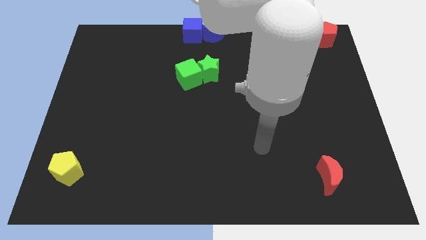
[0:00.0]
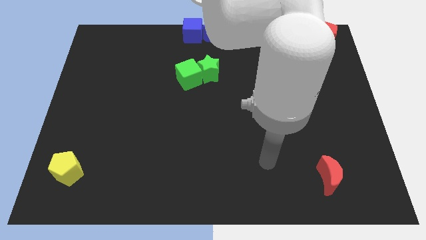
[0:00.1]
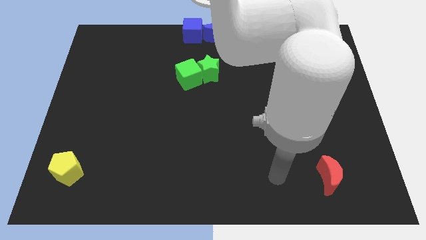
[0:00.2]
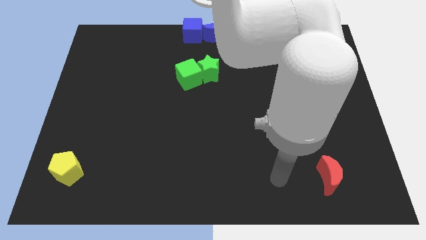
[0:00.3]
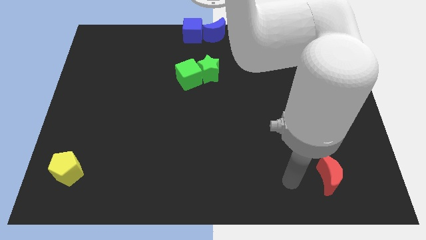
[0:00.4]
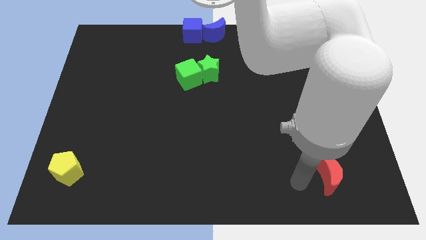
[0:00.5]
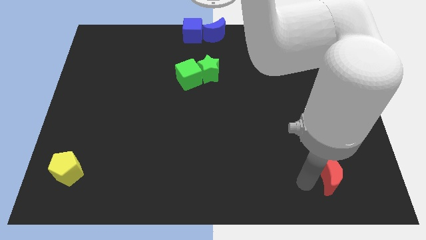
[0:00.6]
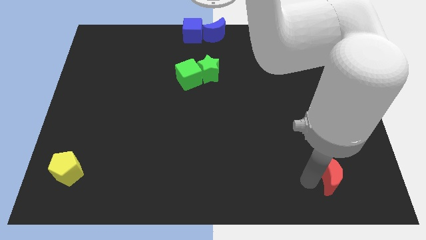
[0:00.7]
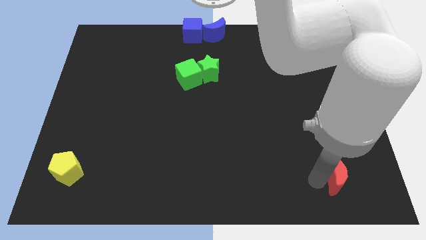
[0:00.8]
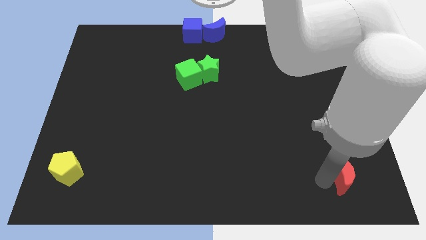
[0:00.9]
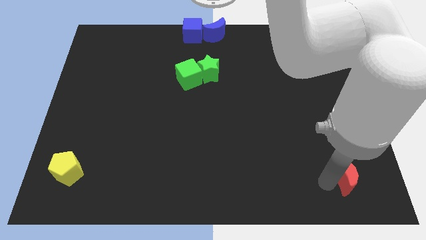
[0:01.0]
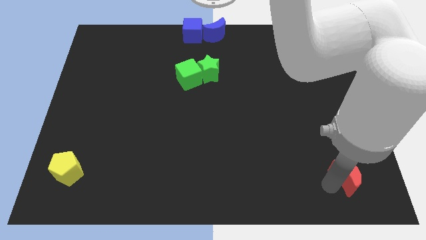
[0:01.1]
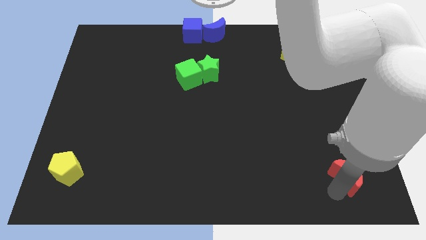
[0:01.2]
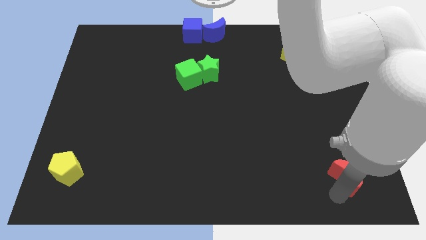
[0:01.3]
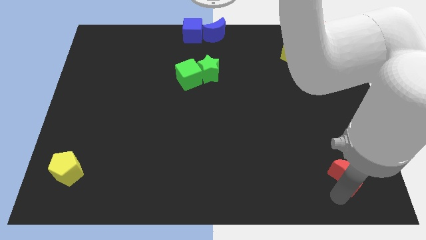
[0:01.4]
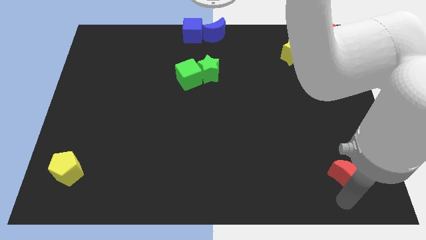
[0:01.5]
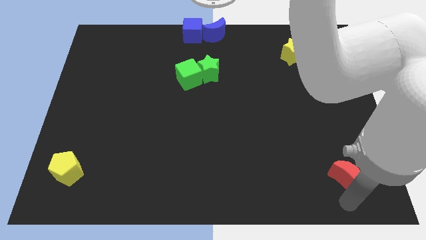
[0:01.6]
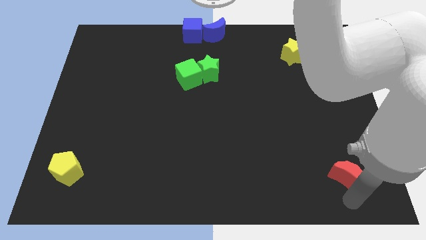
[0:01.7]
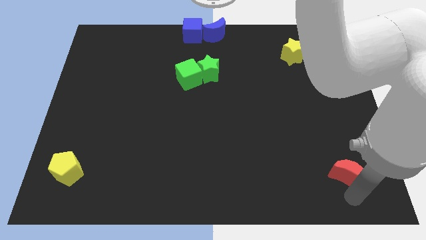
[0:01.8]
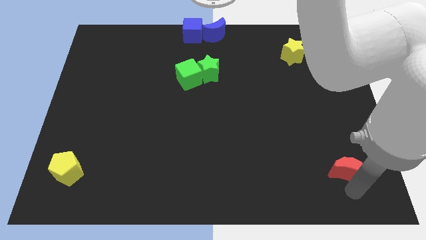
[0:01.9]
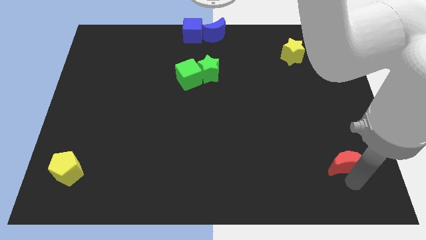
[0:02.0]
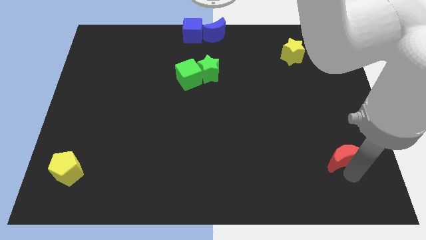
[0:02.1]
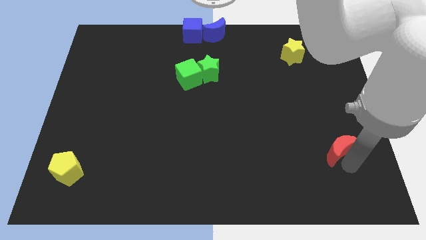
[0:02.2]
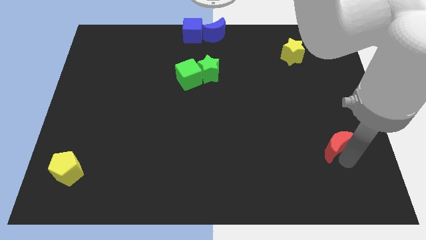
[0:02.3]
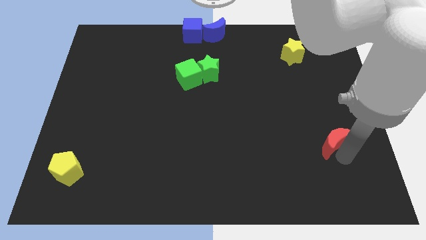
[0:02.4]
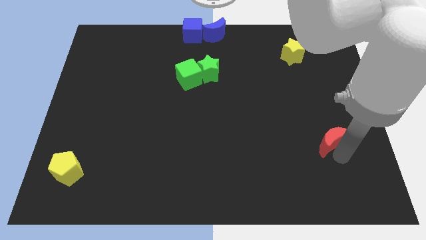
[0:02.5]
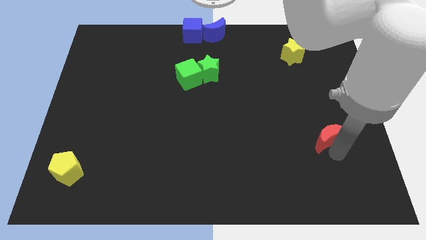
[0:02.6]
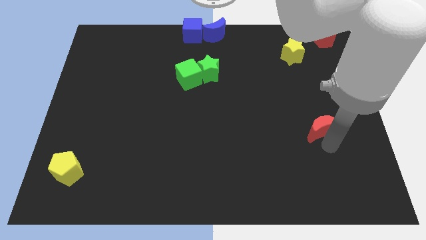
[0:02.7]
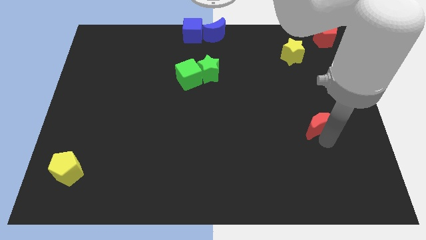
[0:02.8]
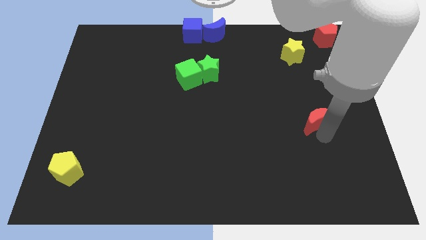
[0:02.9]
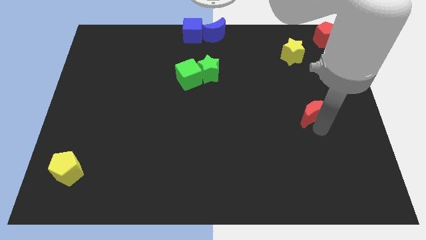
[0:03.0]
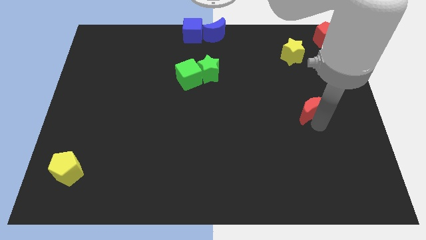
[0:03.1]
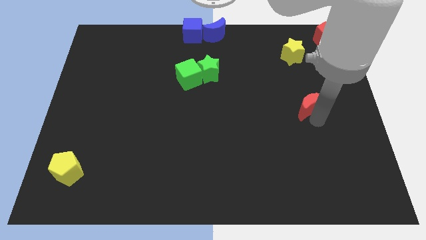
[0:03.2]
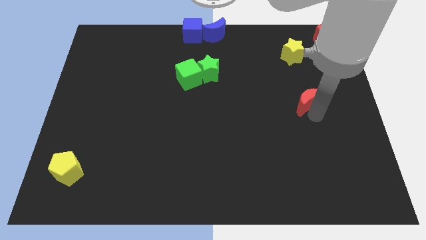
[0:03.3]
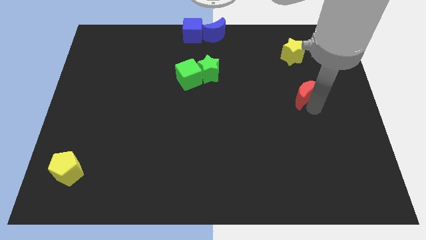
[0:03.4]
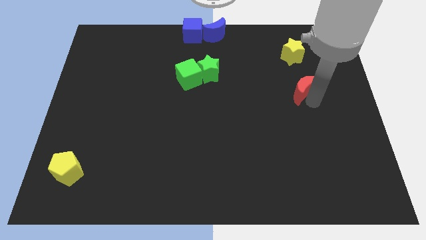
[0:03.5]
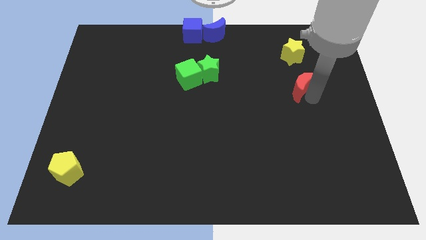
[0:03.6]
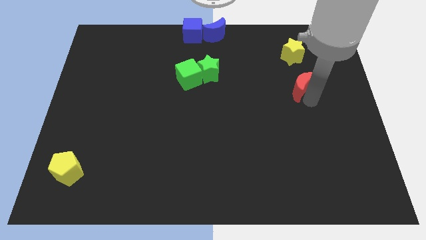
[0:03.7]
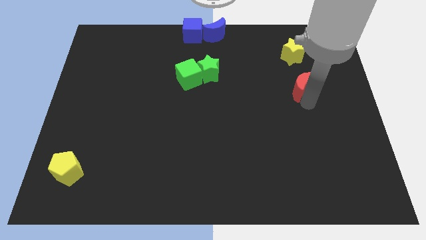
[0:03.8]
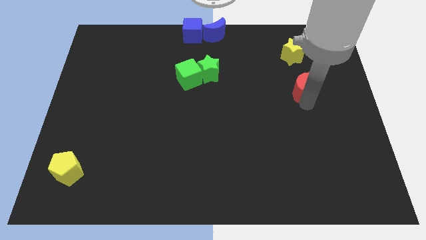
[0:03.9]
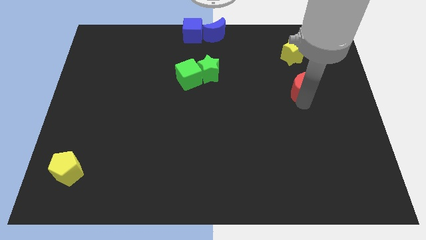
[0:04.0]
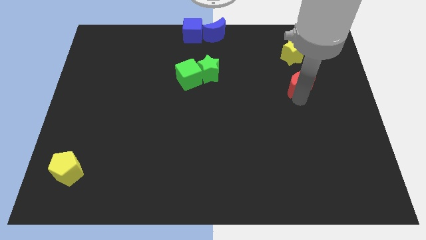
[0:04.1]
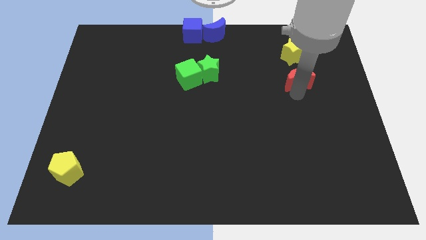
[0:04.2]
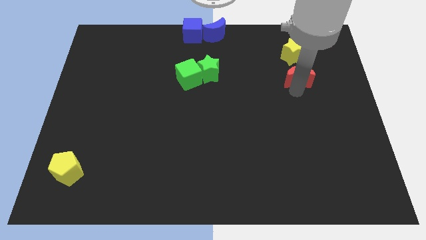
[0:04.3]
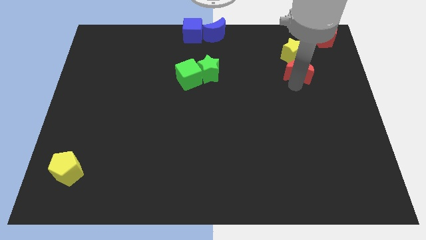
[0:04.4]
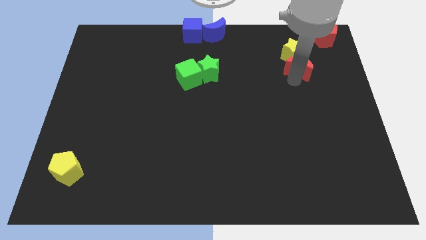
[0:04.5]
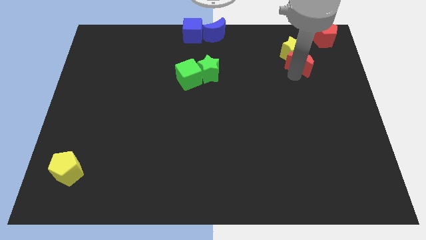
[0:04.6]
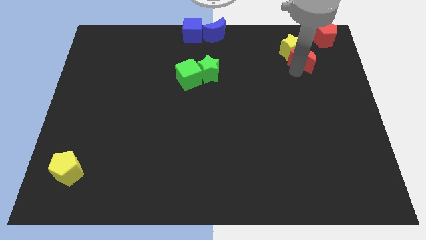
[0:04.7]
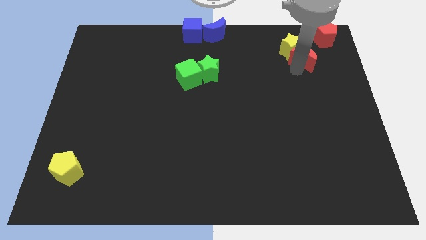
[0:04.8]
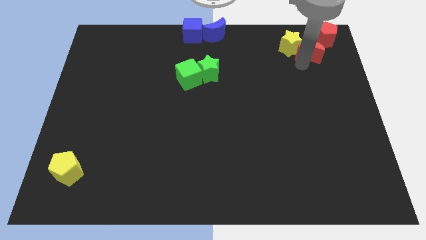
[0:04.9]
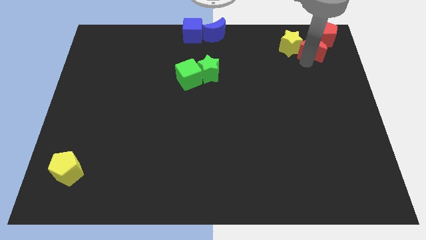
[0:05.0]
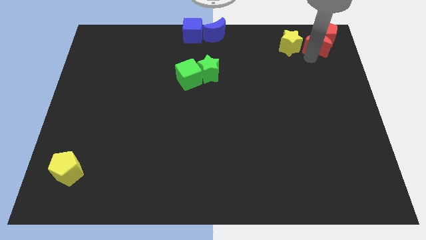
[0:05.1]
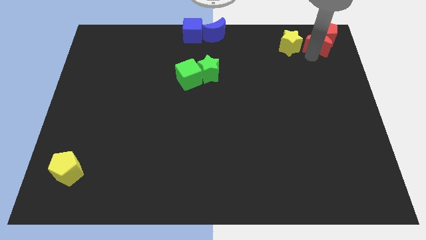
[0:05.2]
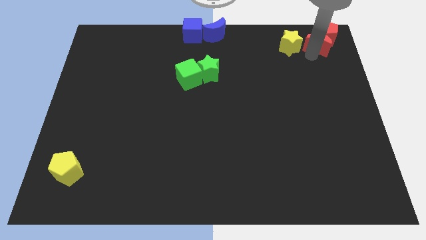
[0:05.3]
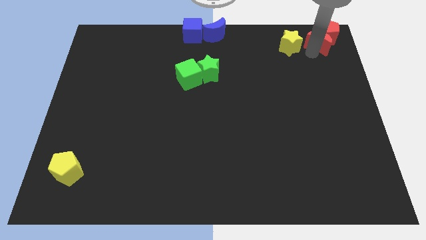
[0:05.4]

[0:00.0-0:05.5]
drag the red moon close to the red pentagon

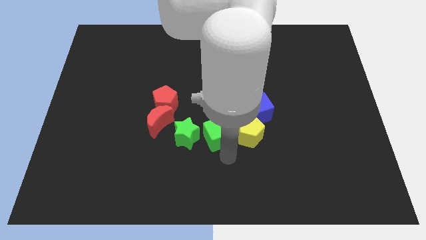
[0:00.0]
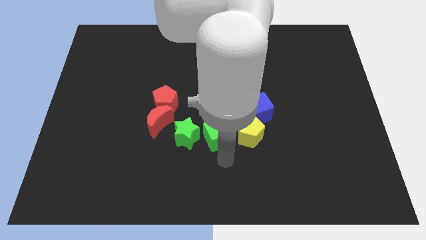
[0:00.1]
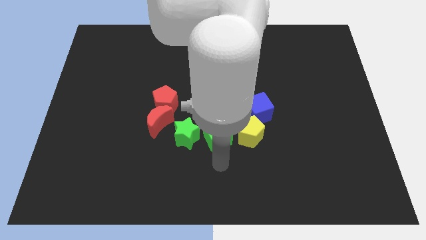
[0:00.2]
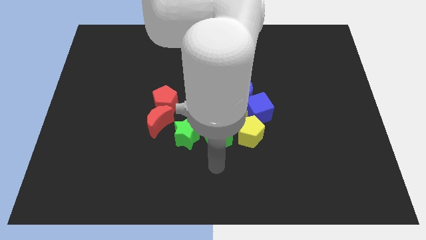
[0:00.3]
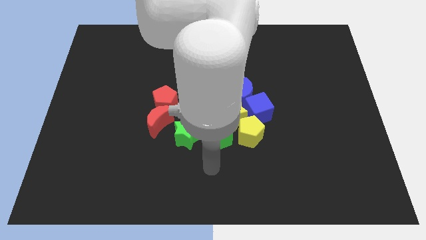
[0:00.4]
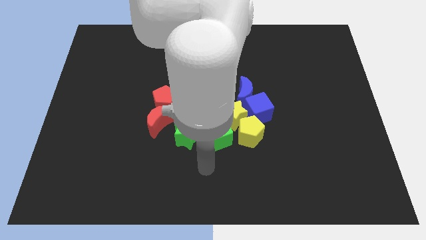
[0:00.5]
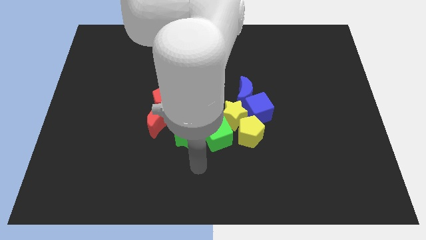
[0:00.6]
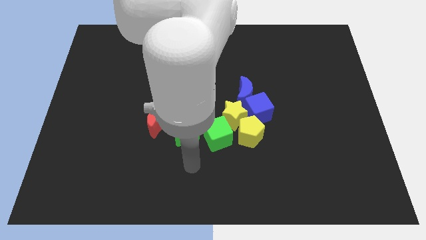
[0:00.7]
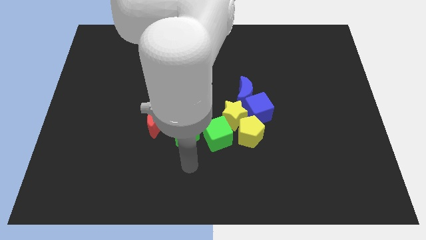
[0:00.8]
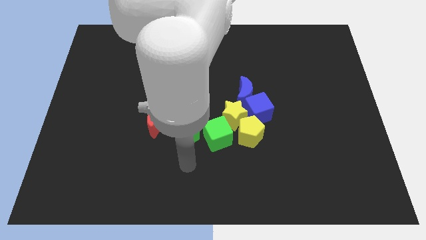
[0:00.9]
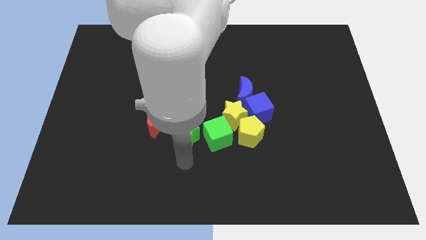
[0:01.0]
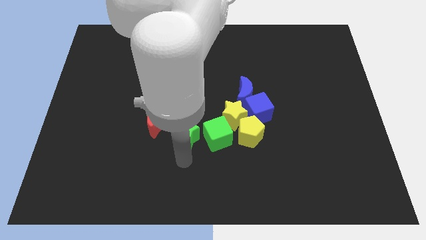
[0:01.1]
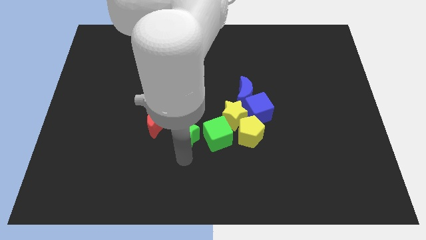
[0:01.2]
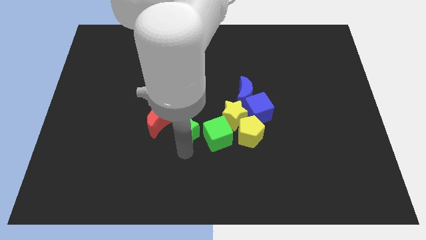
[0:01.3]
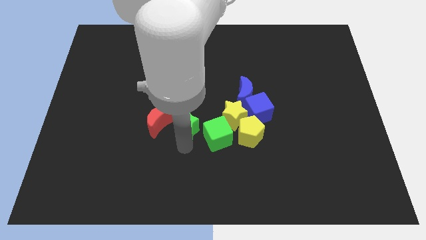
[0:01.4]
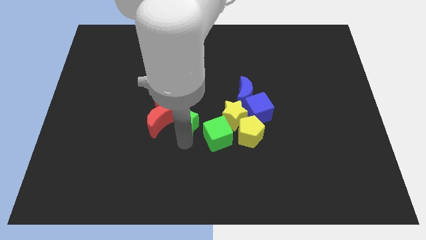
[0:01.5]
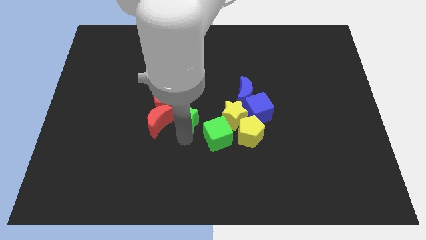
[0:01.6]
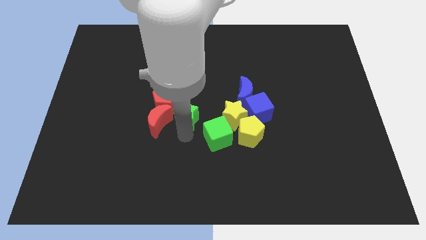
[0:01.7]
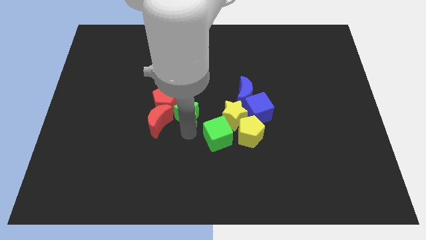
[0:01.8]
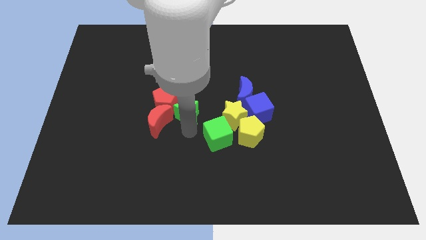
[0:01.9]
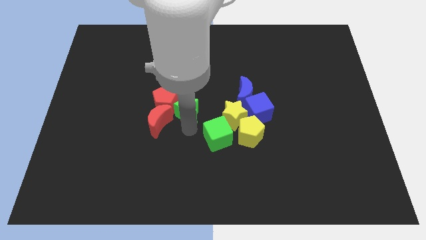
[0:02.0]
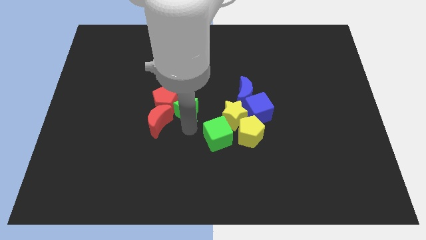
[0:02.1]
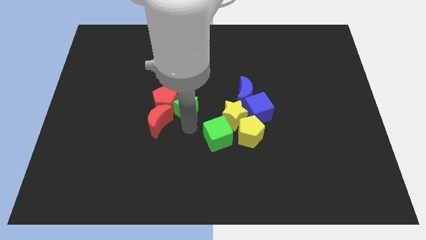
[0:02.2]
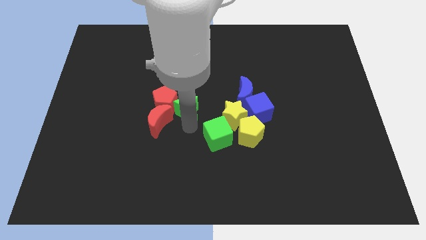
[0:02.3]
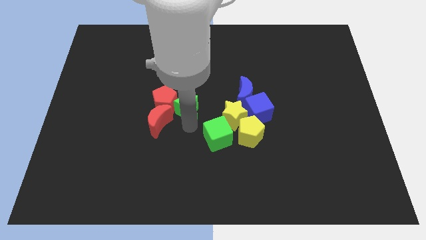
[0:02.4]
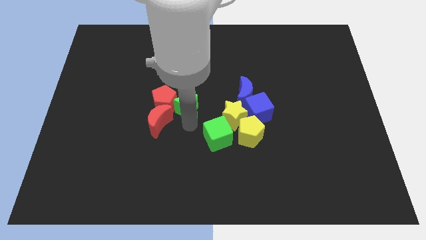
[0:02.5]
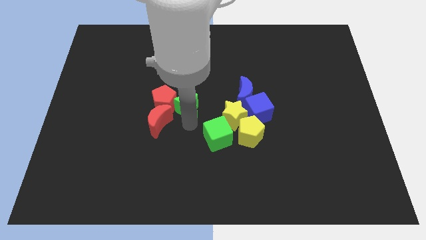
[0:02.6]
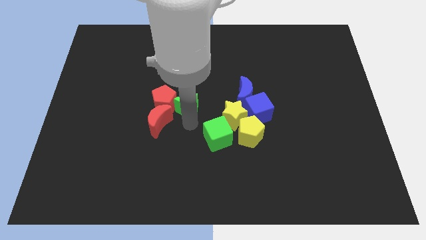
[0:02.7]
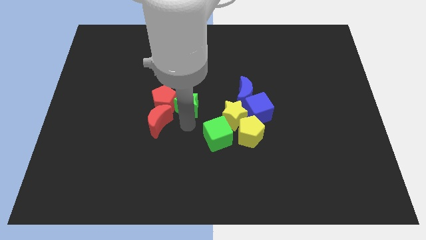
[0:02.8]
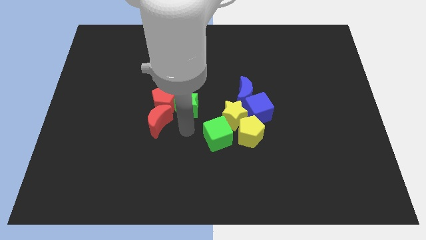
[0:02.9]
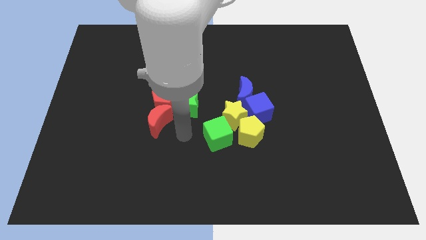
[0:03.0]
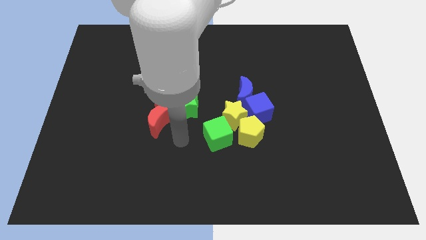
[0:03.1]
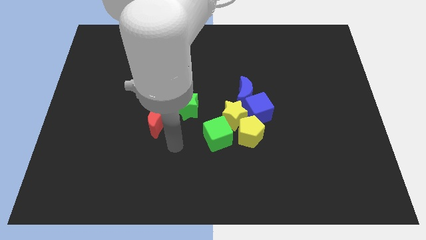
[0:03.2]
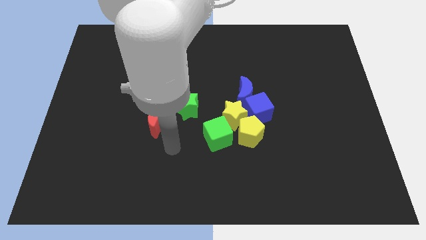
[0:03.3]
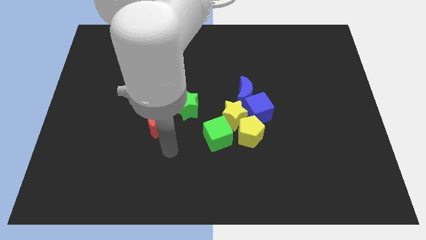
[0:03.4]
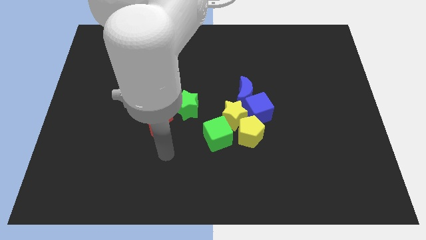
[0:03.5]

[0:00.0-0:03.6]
move the green star to the right of the red pentagon
